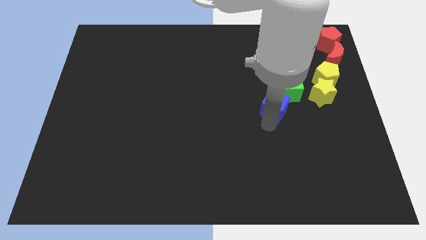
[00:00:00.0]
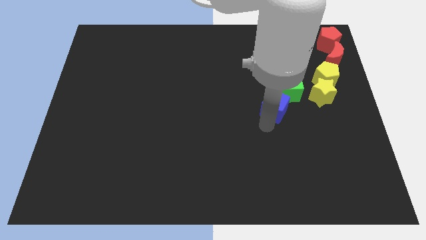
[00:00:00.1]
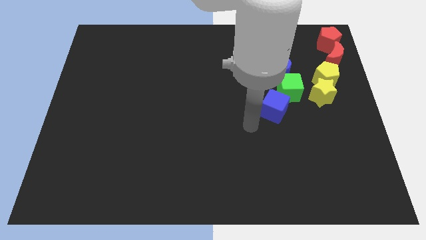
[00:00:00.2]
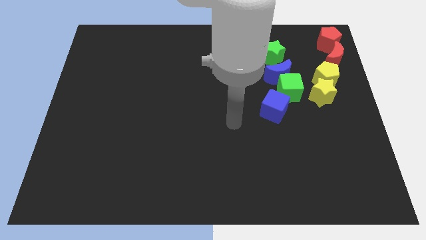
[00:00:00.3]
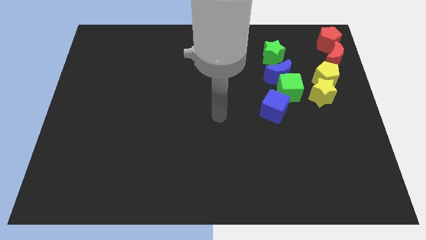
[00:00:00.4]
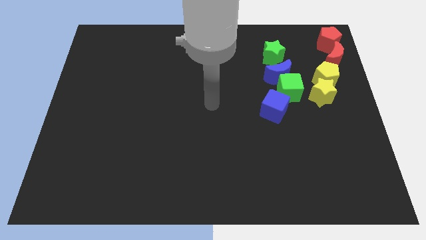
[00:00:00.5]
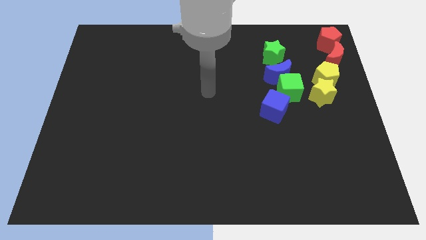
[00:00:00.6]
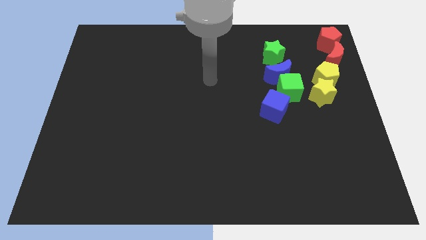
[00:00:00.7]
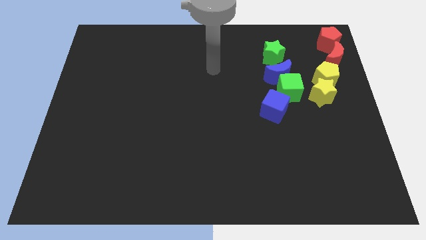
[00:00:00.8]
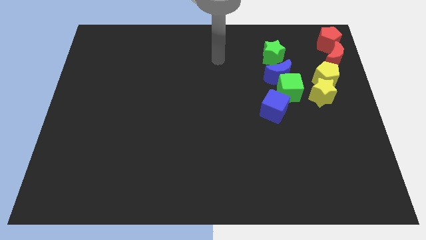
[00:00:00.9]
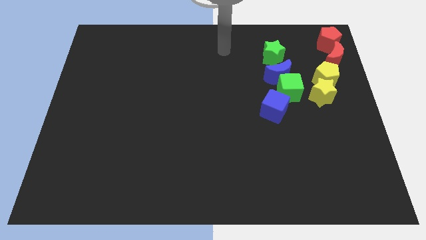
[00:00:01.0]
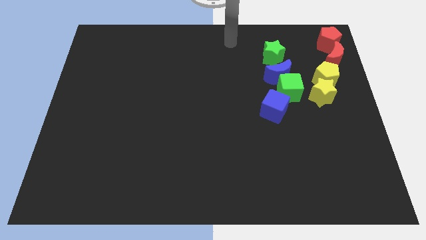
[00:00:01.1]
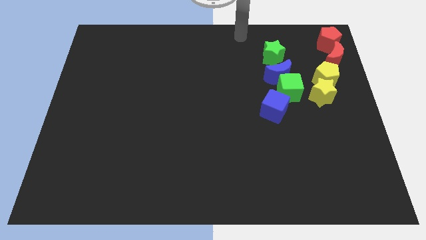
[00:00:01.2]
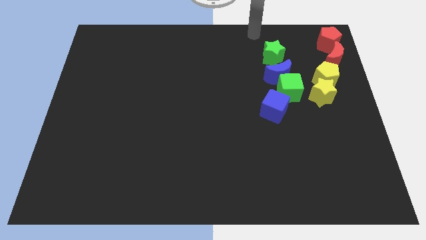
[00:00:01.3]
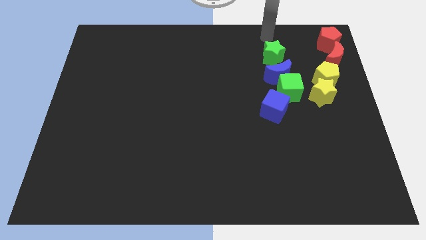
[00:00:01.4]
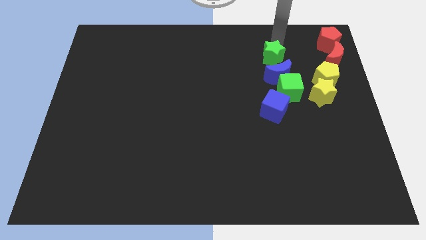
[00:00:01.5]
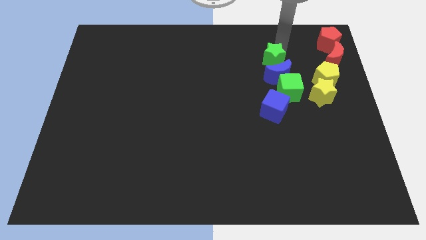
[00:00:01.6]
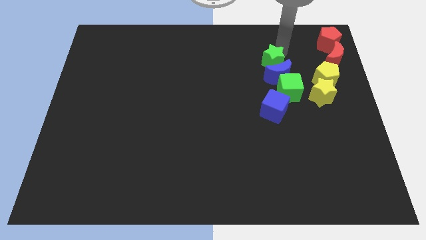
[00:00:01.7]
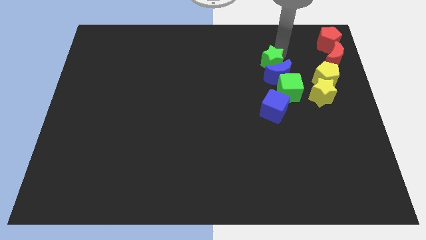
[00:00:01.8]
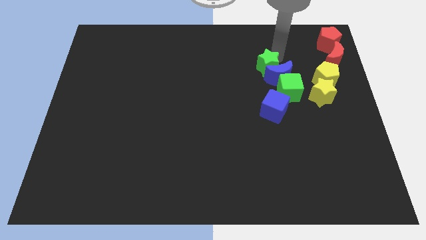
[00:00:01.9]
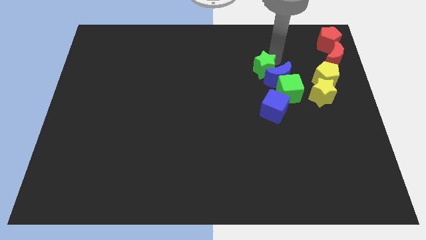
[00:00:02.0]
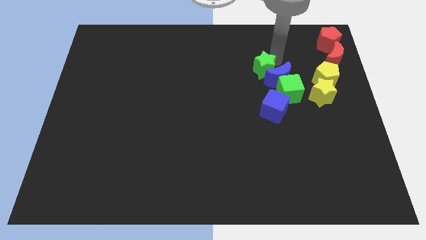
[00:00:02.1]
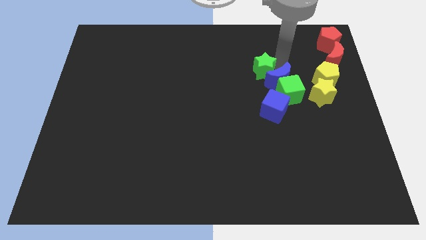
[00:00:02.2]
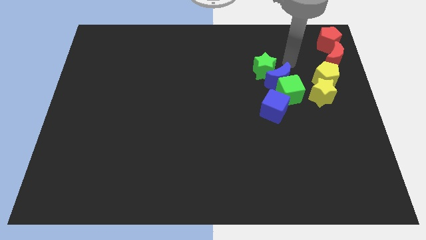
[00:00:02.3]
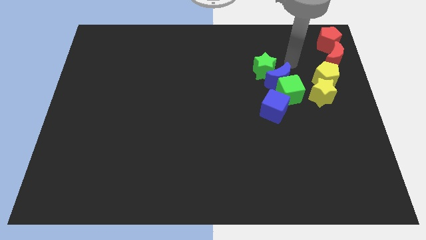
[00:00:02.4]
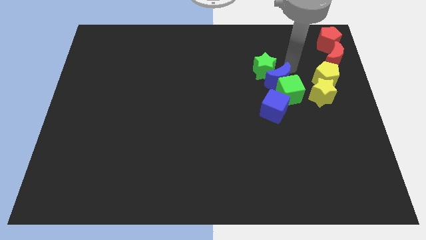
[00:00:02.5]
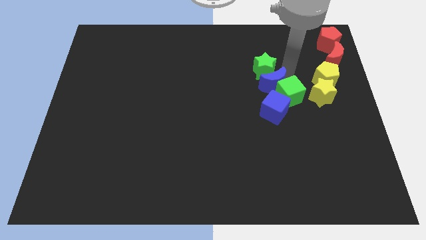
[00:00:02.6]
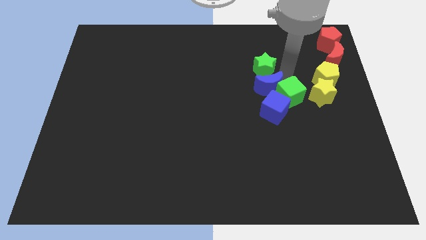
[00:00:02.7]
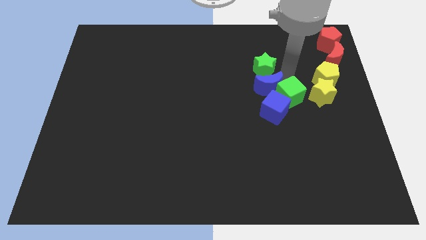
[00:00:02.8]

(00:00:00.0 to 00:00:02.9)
push the green star into the blue crescent

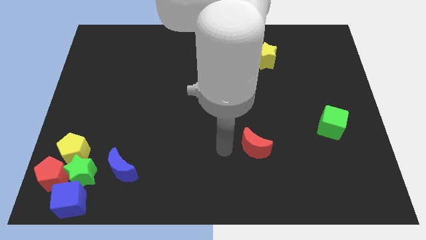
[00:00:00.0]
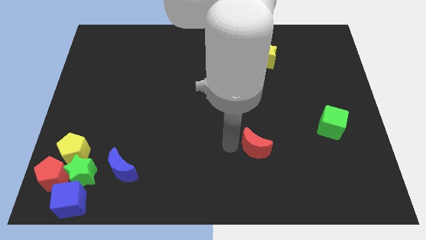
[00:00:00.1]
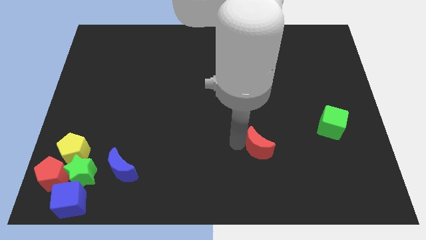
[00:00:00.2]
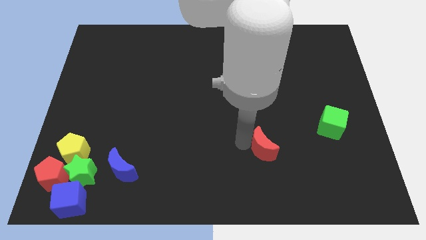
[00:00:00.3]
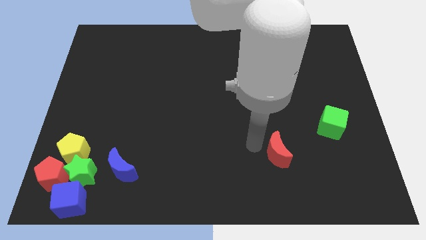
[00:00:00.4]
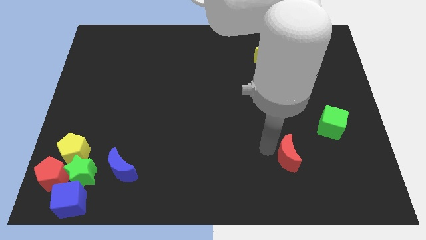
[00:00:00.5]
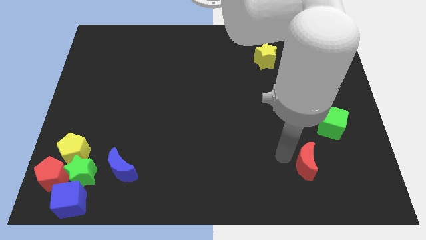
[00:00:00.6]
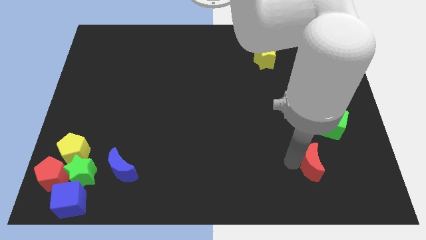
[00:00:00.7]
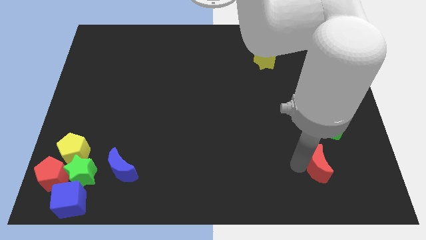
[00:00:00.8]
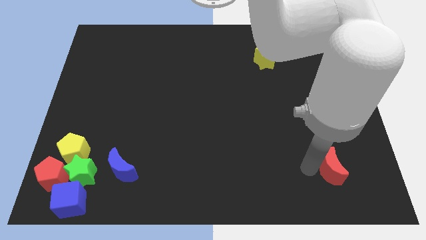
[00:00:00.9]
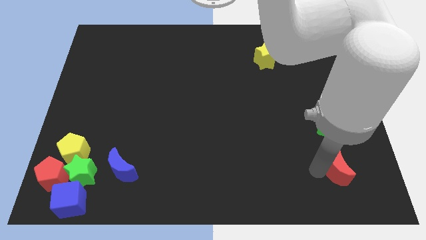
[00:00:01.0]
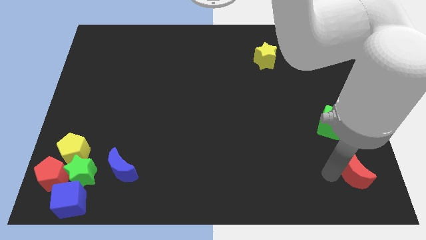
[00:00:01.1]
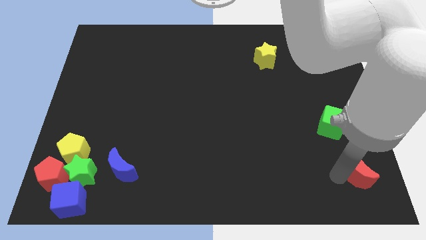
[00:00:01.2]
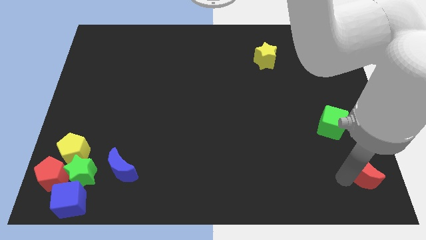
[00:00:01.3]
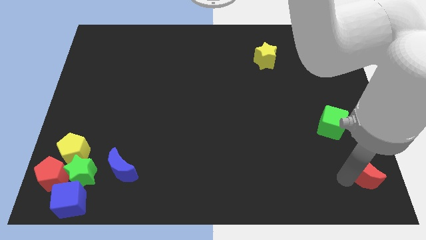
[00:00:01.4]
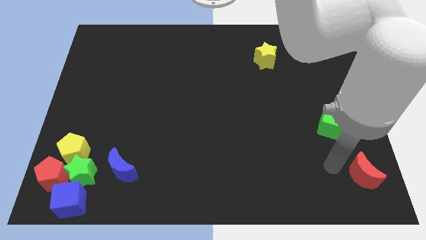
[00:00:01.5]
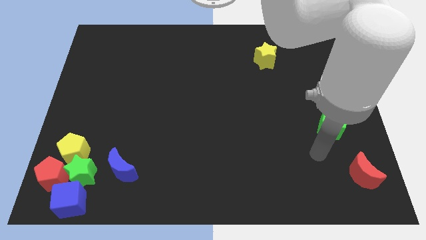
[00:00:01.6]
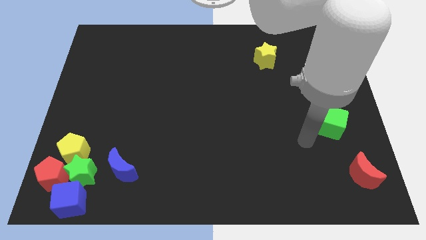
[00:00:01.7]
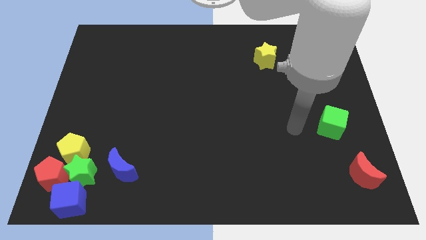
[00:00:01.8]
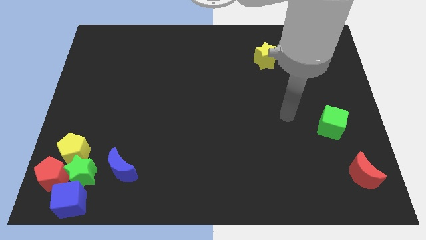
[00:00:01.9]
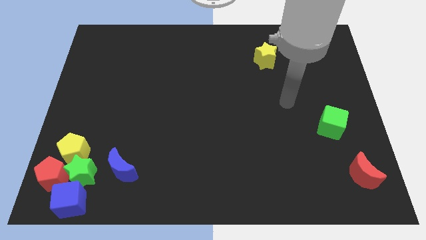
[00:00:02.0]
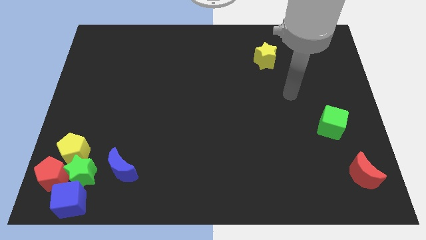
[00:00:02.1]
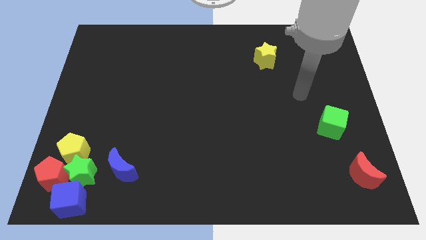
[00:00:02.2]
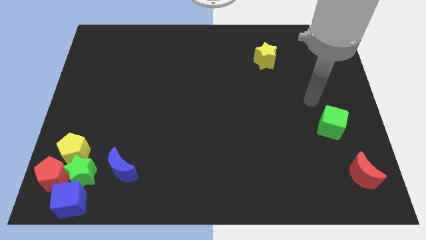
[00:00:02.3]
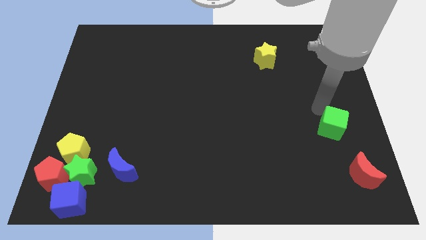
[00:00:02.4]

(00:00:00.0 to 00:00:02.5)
place the arm above the green cube

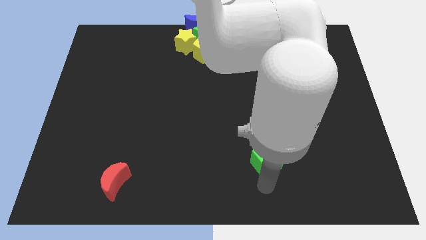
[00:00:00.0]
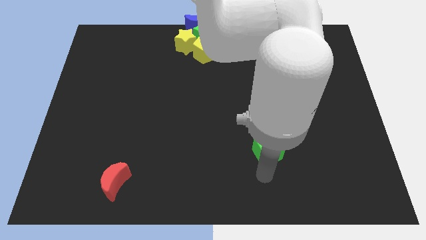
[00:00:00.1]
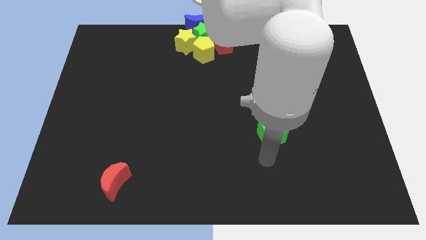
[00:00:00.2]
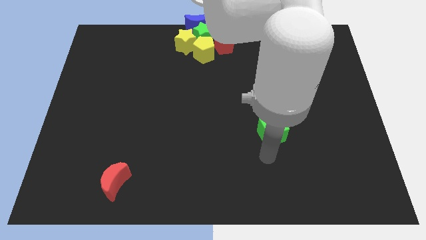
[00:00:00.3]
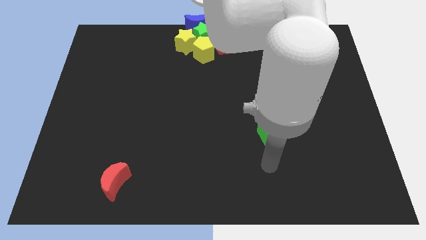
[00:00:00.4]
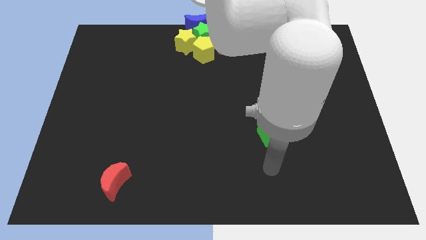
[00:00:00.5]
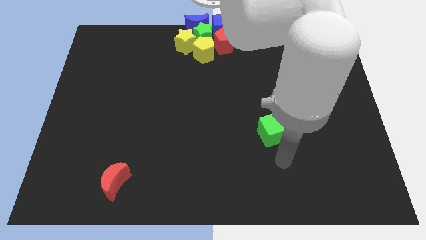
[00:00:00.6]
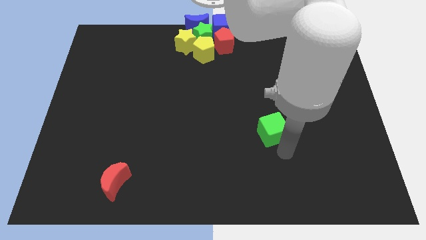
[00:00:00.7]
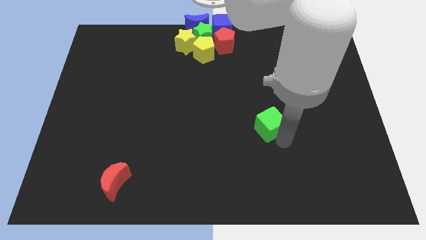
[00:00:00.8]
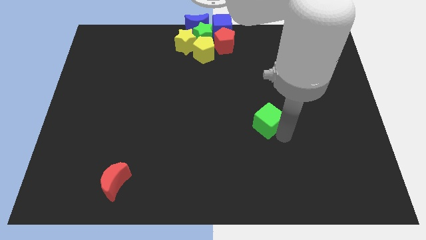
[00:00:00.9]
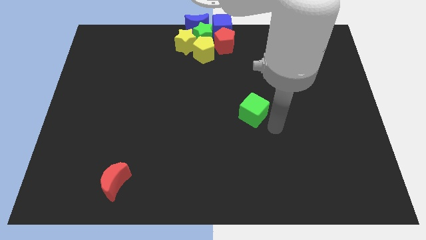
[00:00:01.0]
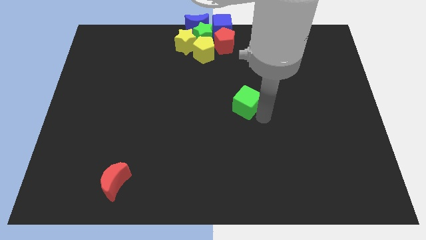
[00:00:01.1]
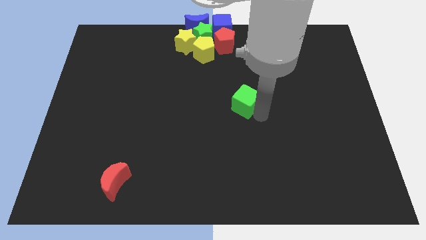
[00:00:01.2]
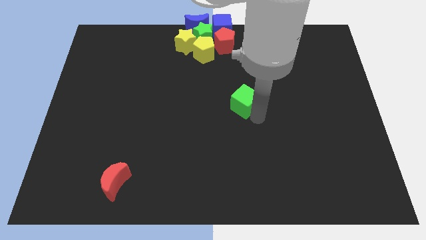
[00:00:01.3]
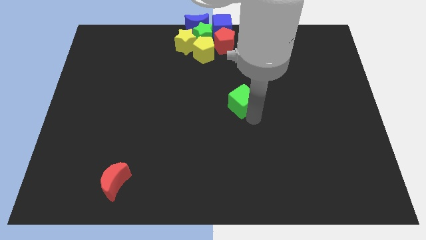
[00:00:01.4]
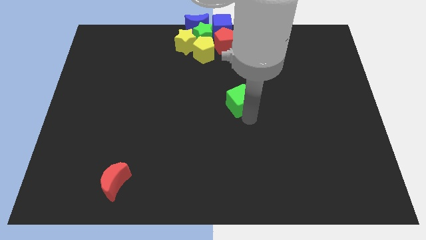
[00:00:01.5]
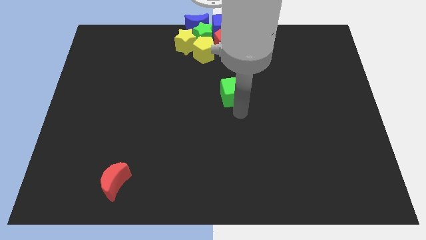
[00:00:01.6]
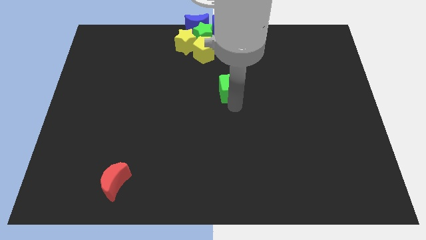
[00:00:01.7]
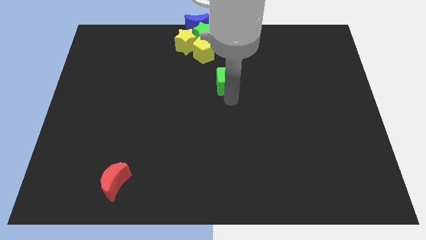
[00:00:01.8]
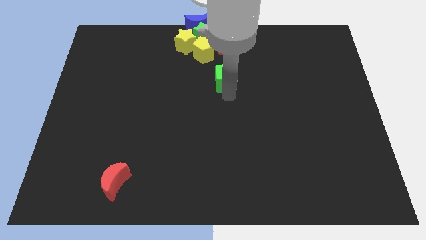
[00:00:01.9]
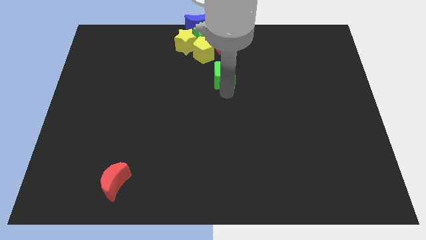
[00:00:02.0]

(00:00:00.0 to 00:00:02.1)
put the green cube below the red pentagon

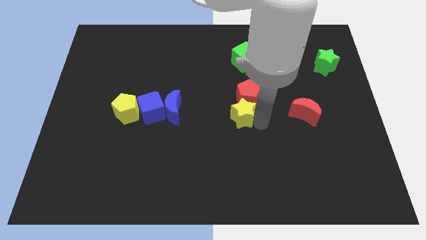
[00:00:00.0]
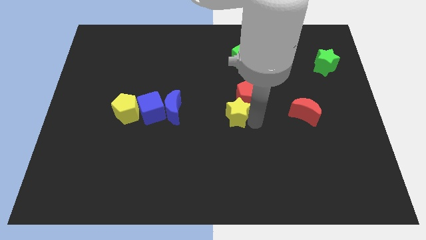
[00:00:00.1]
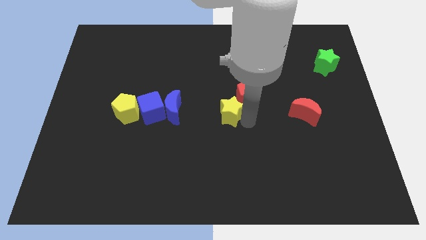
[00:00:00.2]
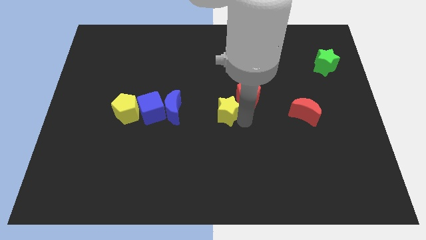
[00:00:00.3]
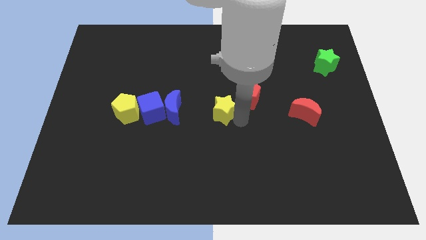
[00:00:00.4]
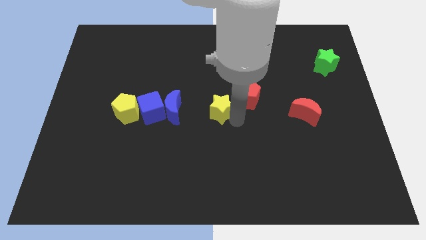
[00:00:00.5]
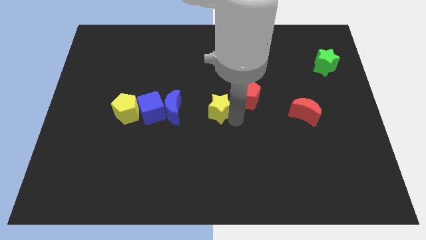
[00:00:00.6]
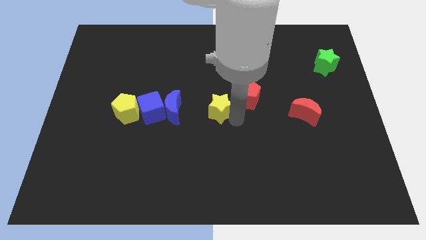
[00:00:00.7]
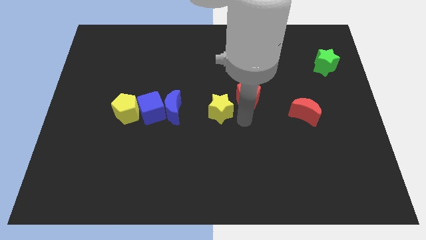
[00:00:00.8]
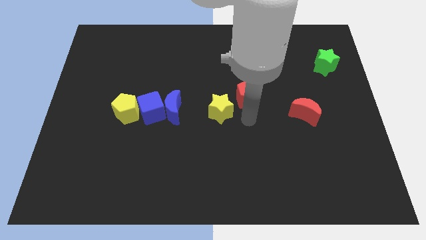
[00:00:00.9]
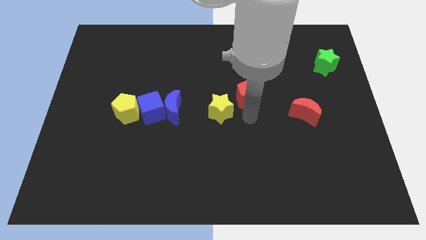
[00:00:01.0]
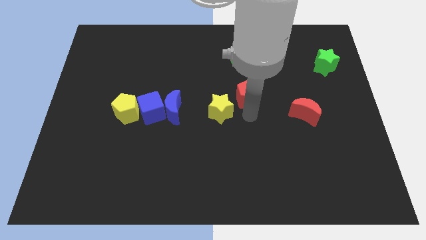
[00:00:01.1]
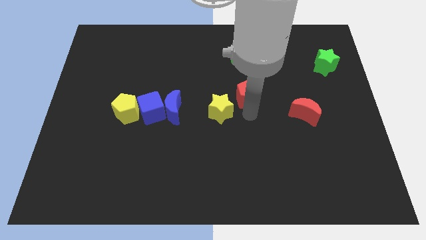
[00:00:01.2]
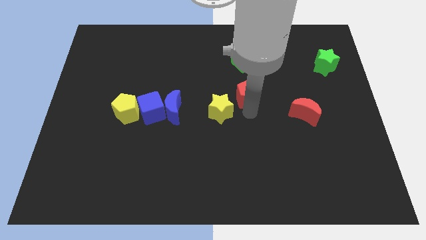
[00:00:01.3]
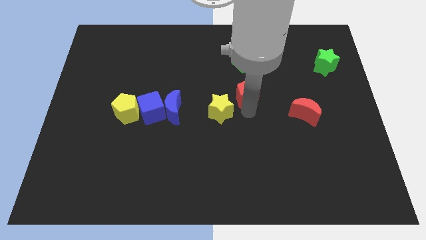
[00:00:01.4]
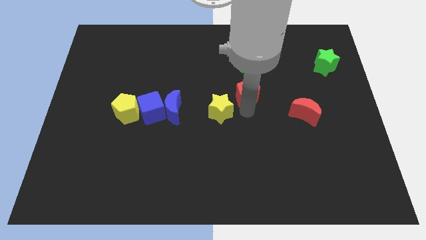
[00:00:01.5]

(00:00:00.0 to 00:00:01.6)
separate the yellow star and red pentagon
